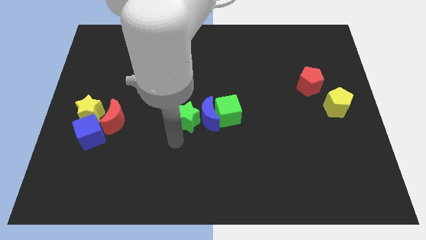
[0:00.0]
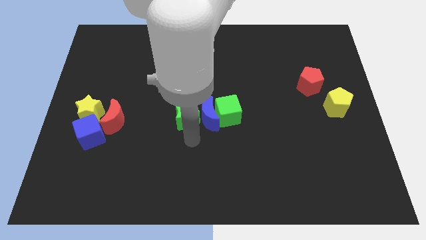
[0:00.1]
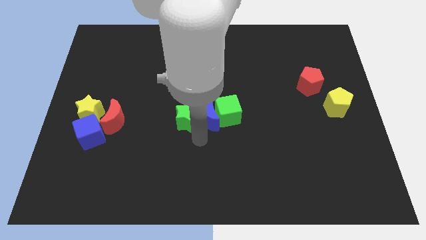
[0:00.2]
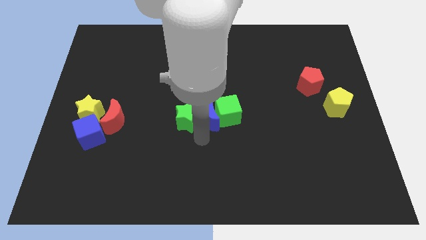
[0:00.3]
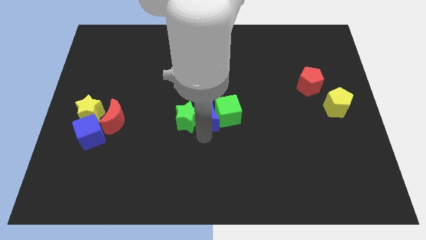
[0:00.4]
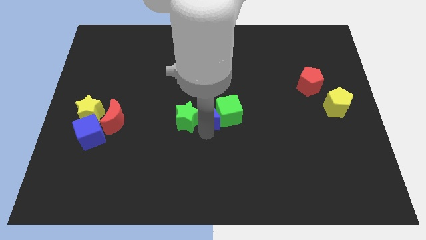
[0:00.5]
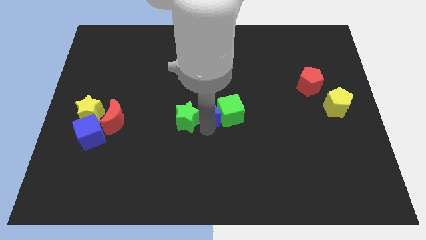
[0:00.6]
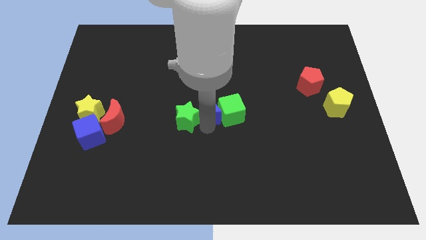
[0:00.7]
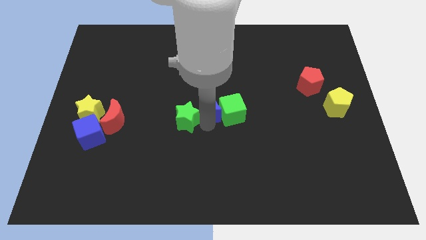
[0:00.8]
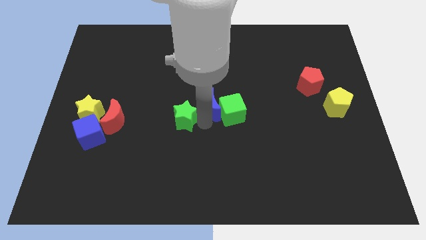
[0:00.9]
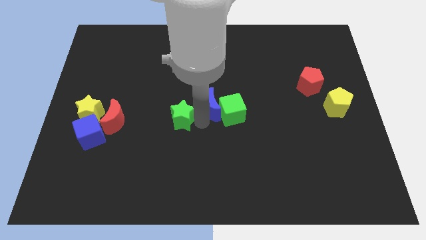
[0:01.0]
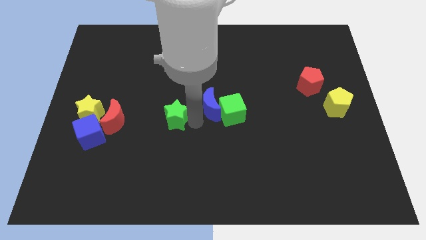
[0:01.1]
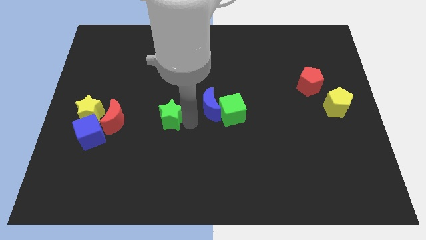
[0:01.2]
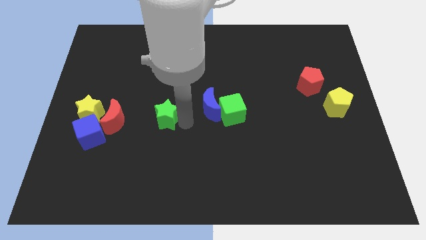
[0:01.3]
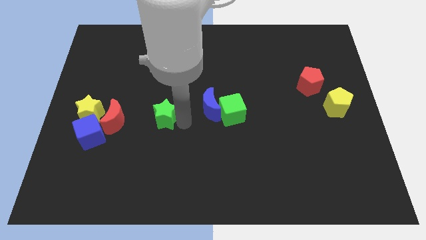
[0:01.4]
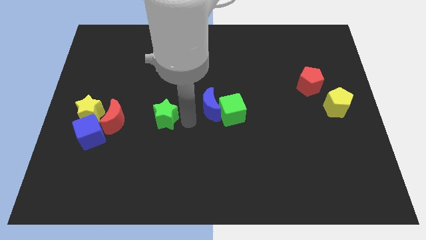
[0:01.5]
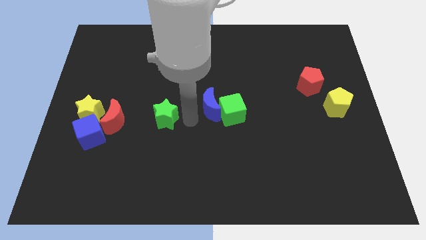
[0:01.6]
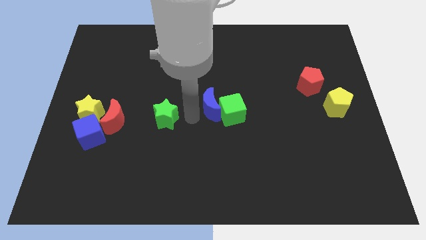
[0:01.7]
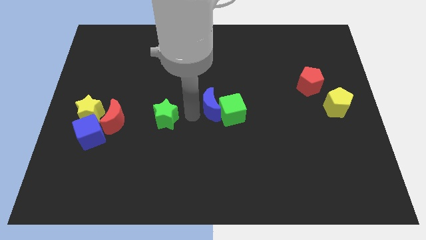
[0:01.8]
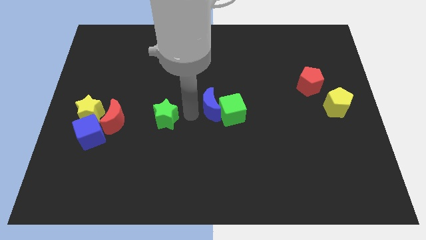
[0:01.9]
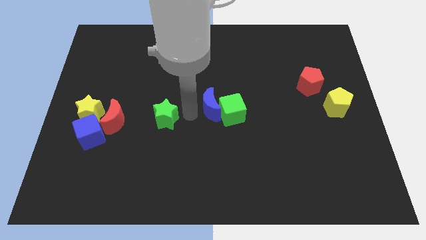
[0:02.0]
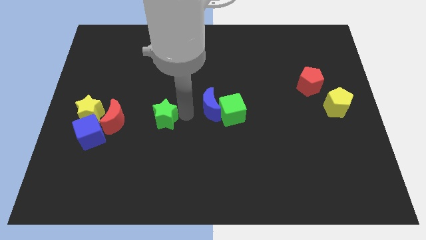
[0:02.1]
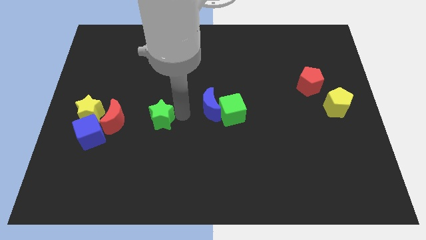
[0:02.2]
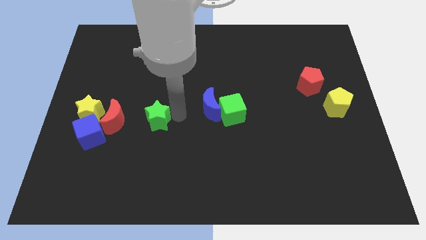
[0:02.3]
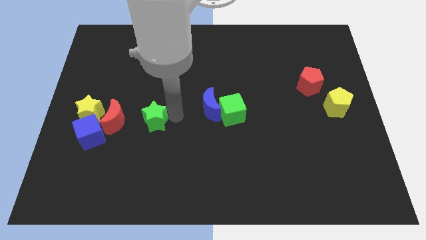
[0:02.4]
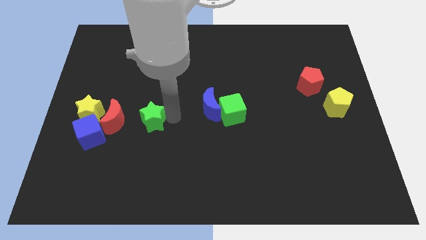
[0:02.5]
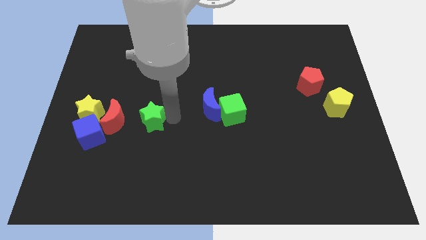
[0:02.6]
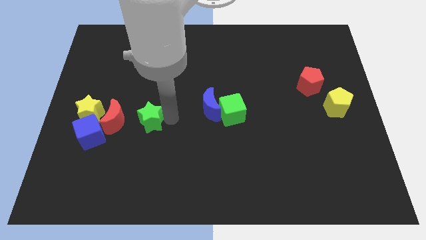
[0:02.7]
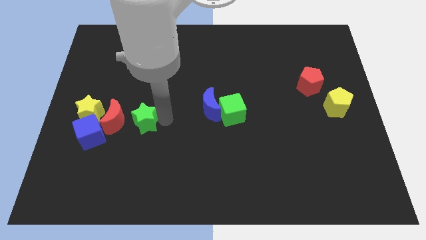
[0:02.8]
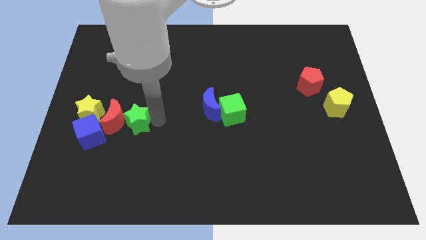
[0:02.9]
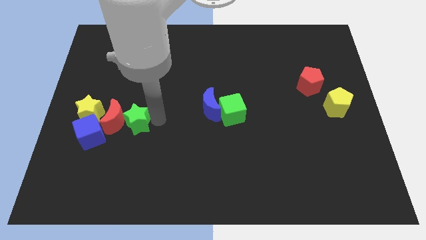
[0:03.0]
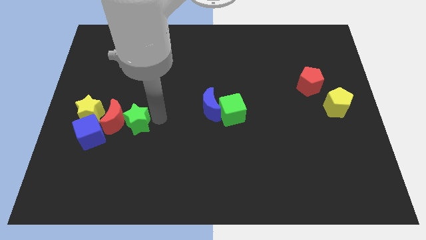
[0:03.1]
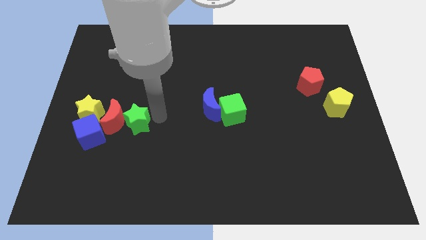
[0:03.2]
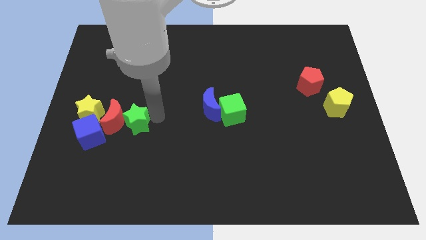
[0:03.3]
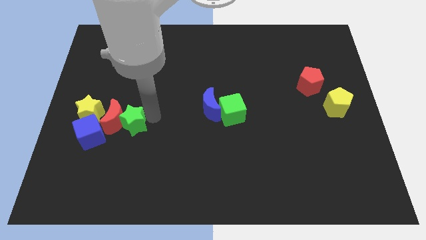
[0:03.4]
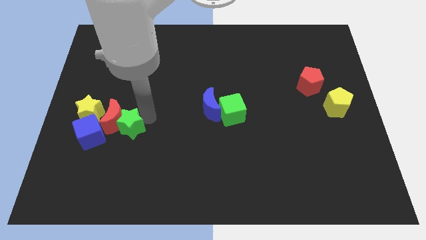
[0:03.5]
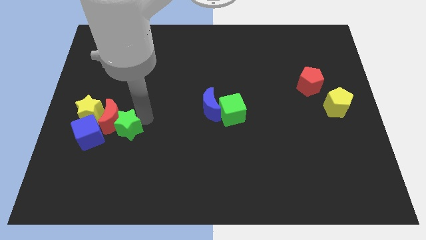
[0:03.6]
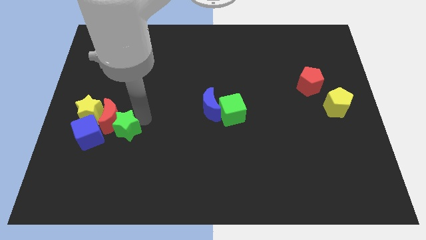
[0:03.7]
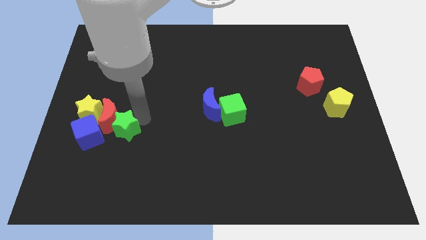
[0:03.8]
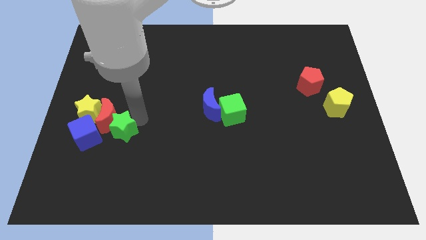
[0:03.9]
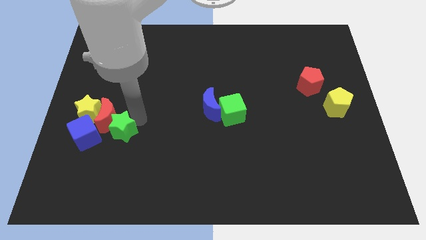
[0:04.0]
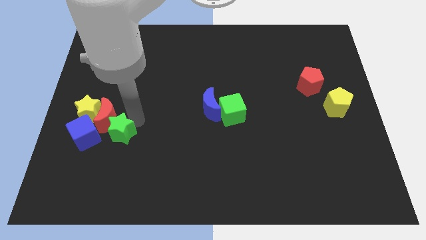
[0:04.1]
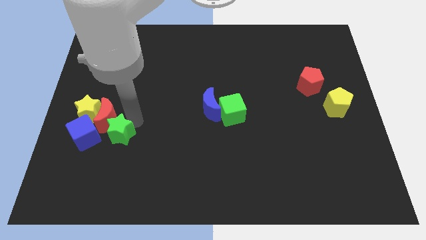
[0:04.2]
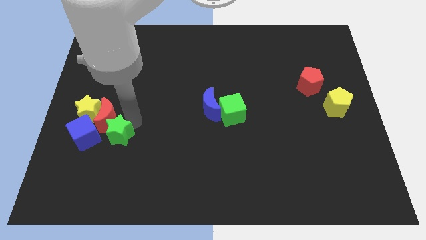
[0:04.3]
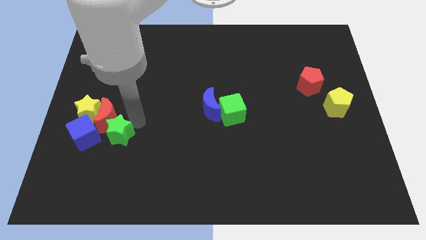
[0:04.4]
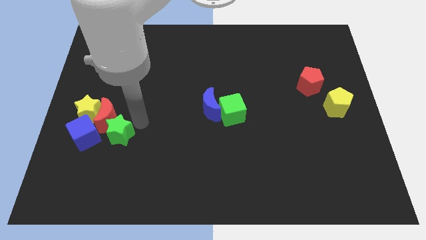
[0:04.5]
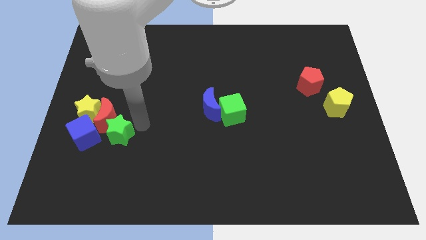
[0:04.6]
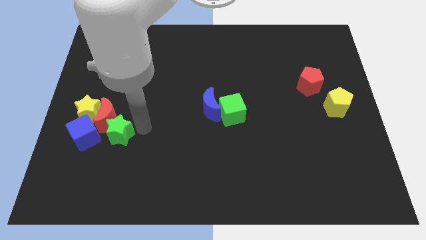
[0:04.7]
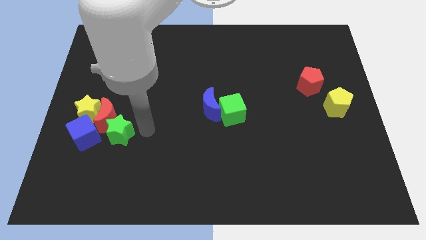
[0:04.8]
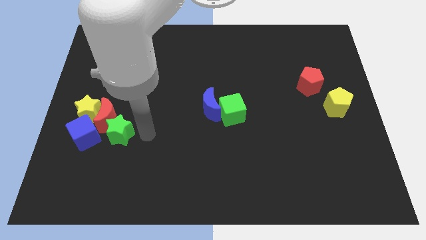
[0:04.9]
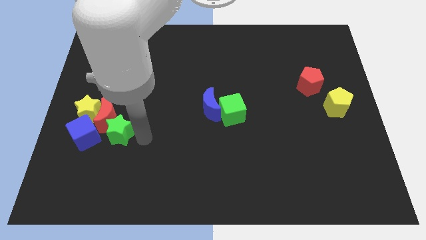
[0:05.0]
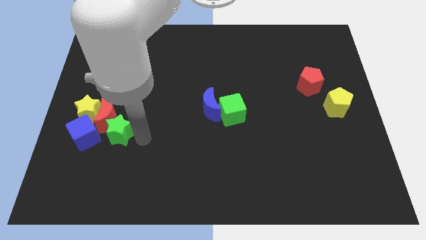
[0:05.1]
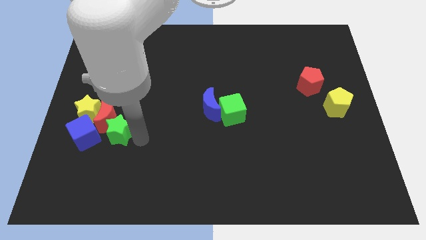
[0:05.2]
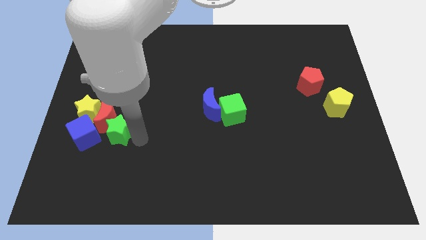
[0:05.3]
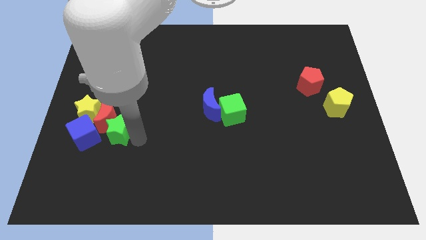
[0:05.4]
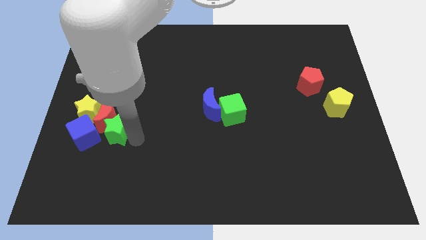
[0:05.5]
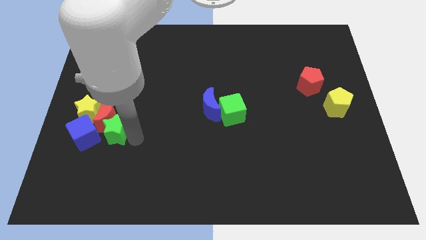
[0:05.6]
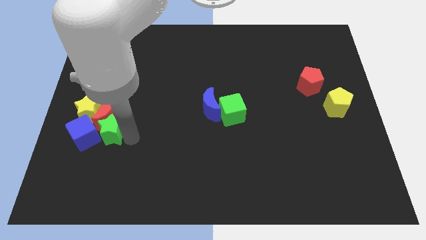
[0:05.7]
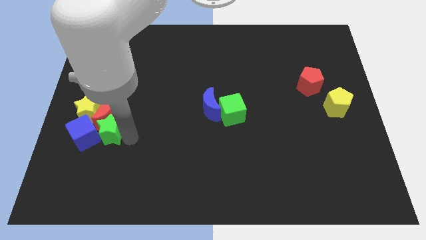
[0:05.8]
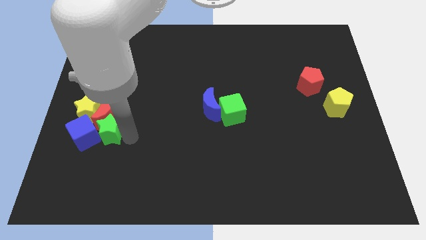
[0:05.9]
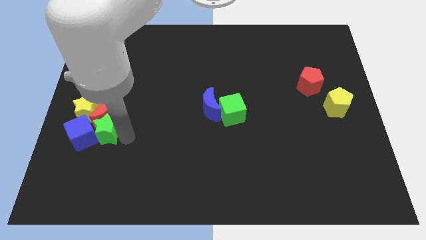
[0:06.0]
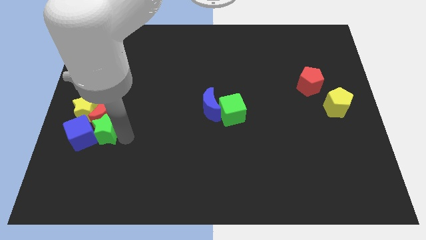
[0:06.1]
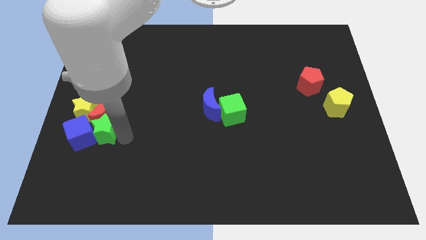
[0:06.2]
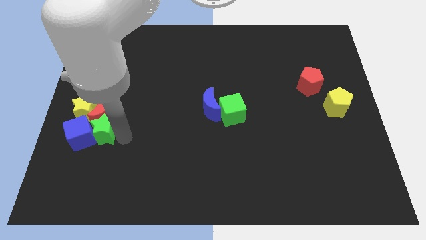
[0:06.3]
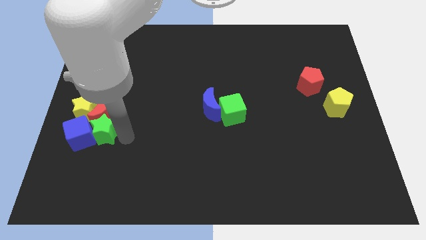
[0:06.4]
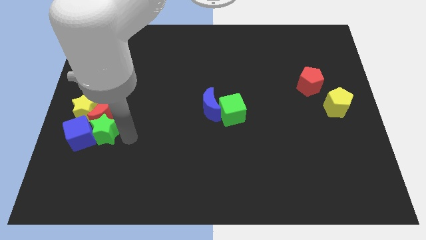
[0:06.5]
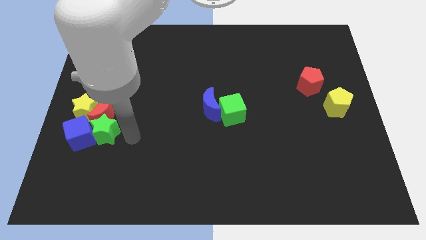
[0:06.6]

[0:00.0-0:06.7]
push the green star into the blue cube

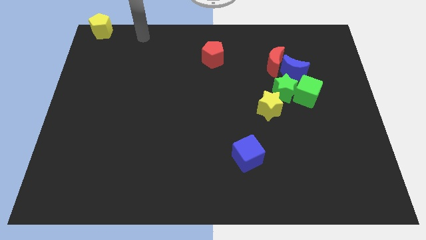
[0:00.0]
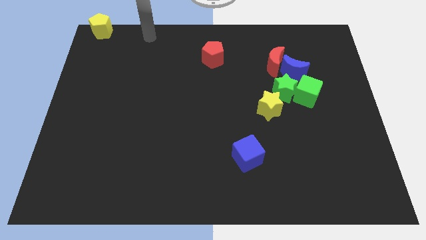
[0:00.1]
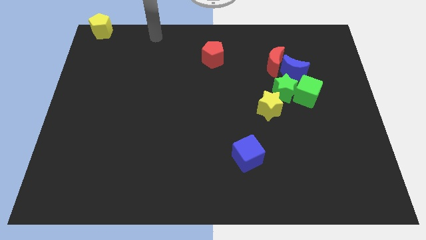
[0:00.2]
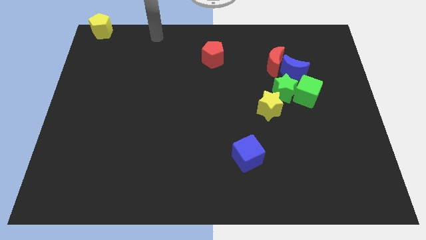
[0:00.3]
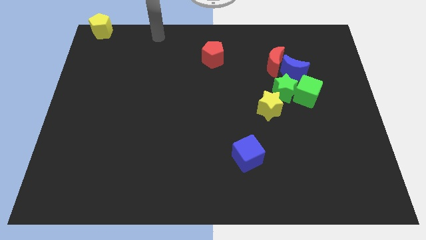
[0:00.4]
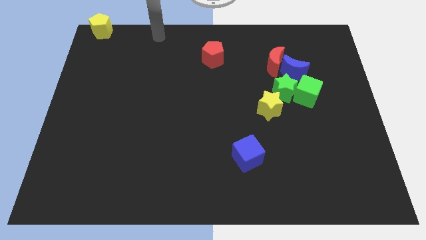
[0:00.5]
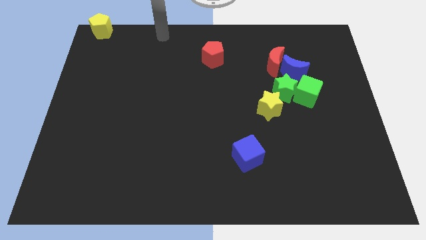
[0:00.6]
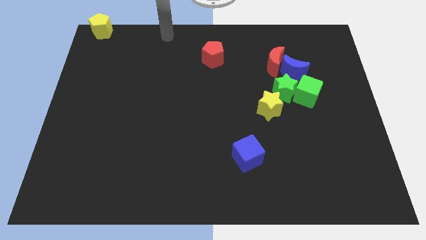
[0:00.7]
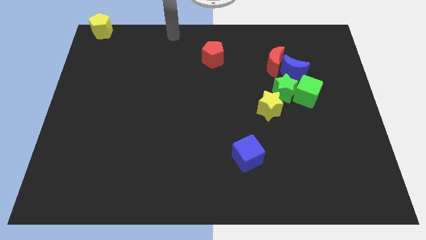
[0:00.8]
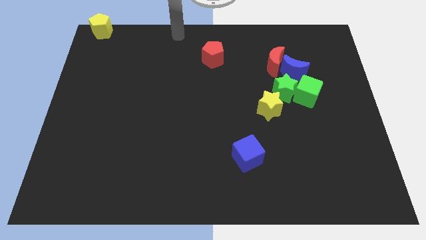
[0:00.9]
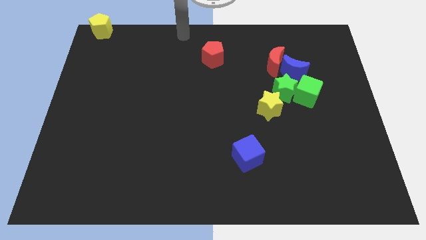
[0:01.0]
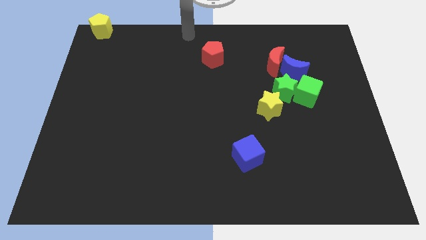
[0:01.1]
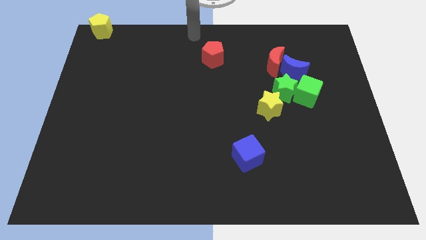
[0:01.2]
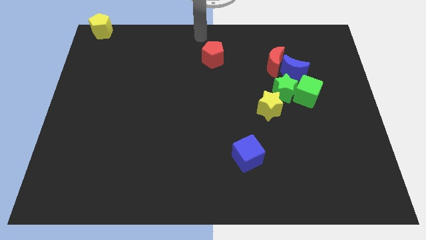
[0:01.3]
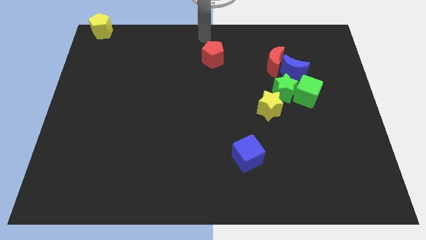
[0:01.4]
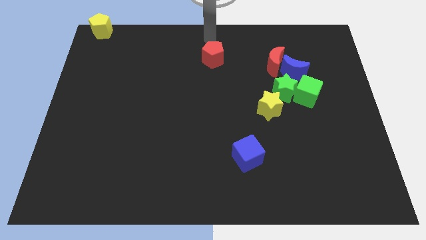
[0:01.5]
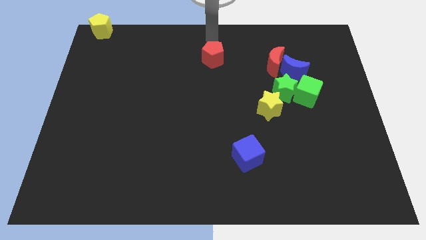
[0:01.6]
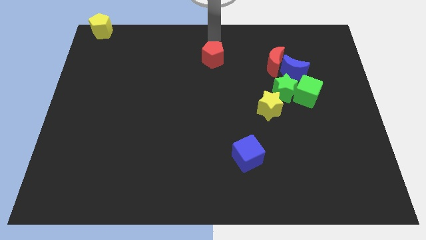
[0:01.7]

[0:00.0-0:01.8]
move your arm to the top of red pentagon

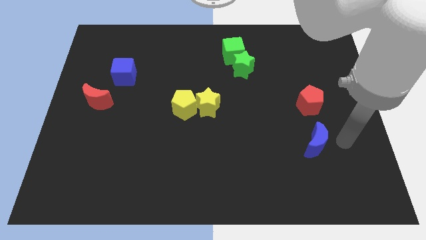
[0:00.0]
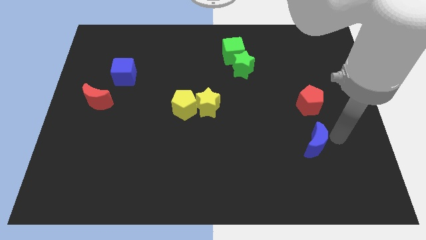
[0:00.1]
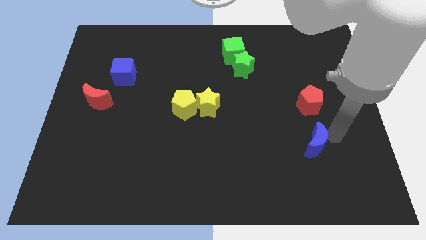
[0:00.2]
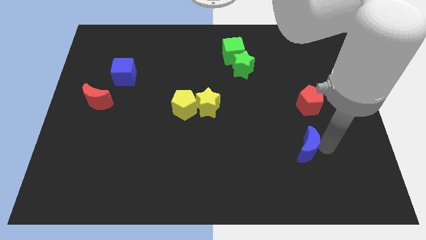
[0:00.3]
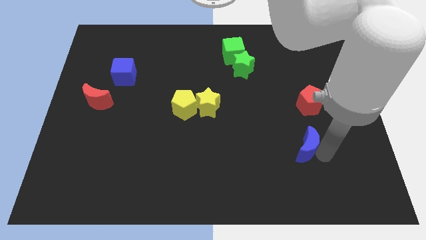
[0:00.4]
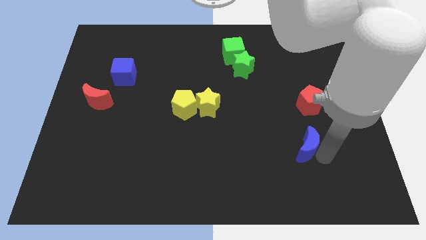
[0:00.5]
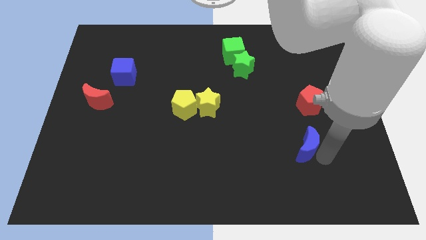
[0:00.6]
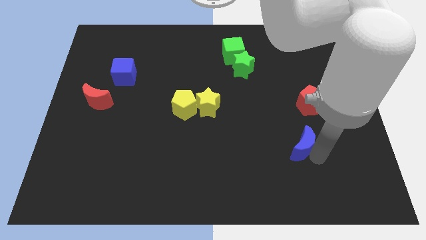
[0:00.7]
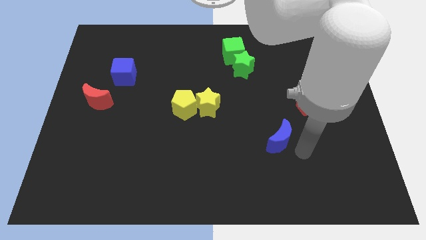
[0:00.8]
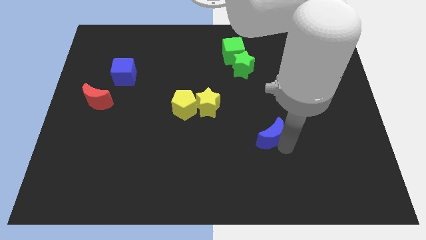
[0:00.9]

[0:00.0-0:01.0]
place the blue crescent towards the bottom left side of the red pentagon
